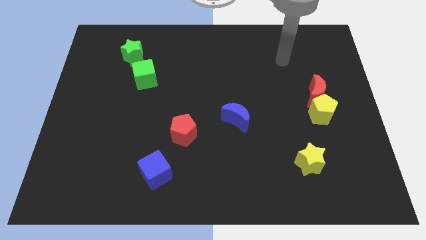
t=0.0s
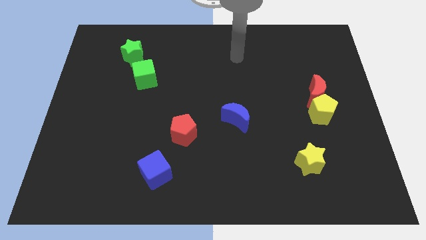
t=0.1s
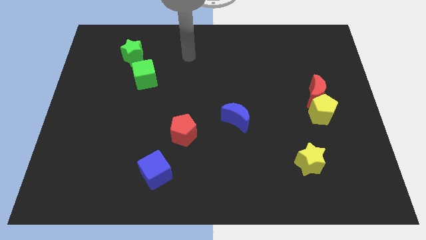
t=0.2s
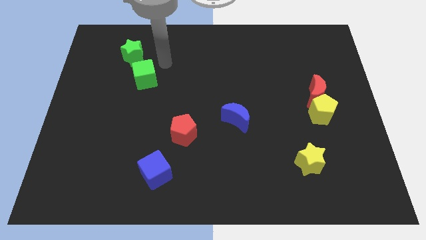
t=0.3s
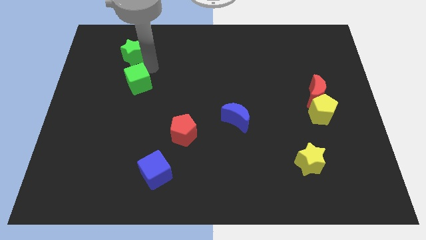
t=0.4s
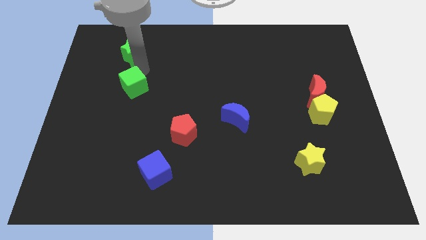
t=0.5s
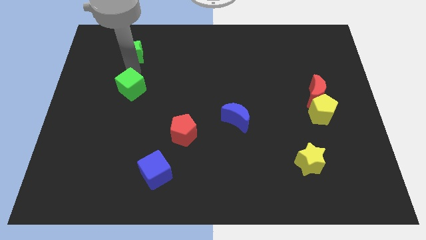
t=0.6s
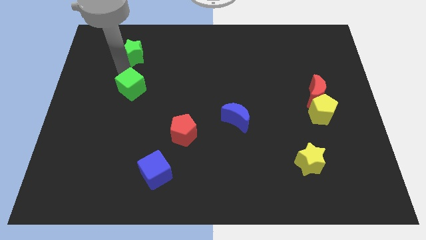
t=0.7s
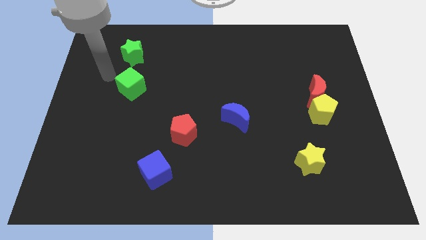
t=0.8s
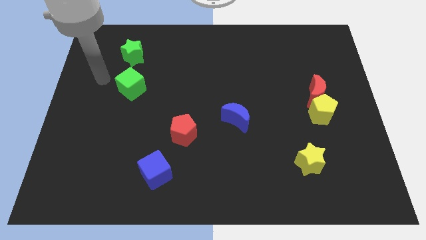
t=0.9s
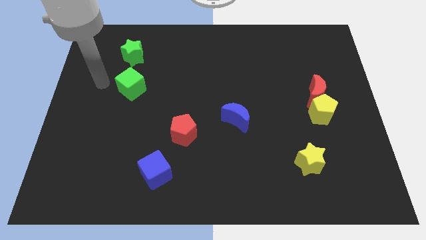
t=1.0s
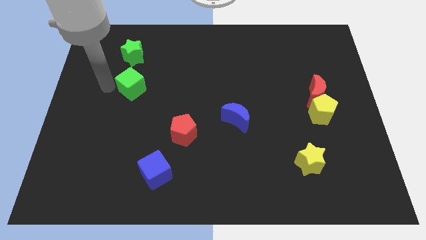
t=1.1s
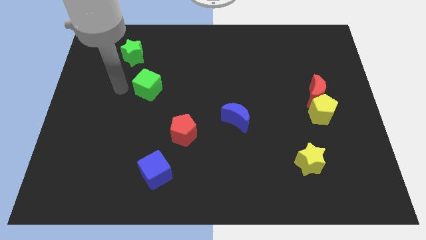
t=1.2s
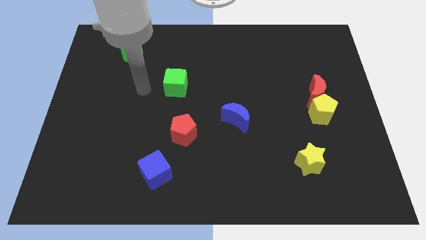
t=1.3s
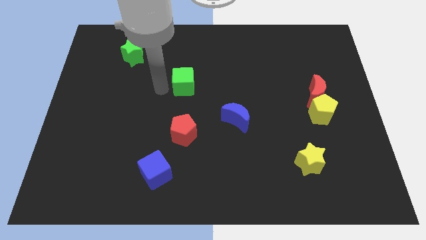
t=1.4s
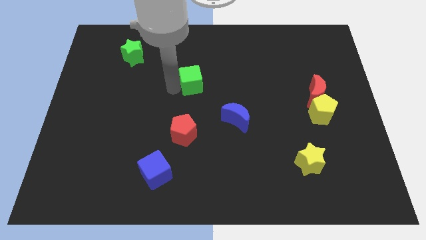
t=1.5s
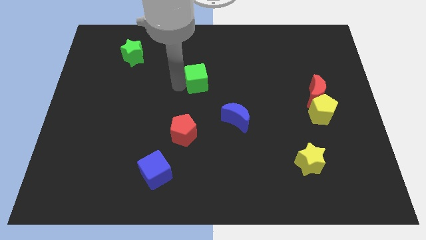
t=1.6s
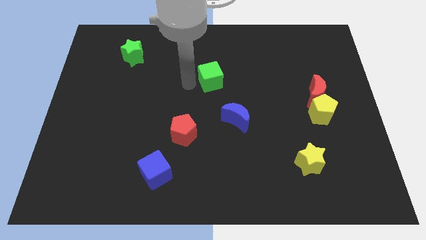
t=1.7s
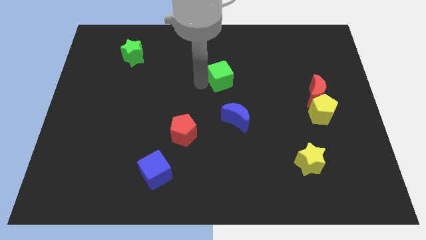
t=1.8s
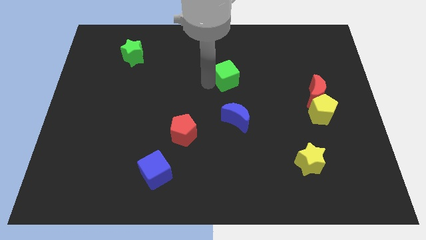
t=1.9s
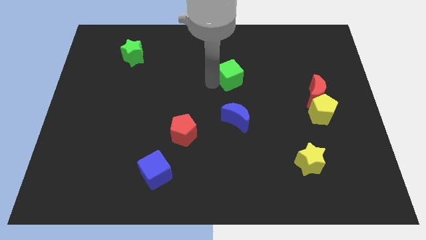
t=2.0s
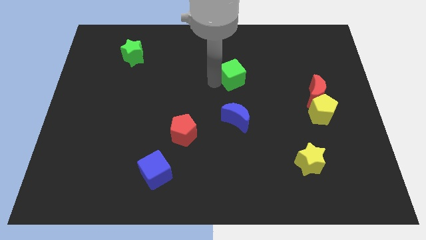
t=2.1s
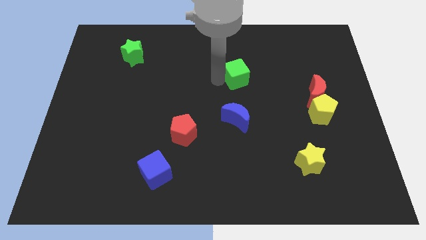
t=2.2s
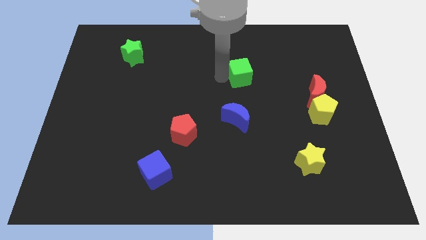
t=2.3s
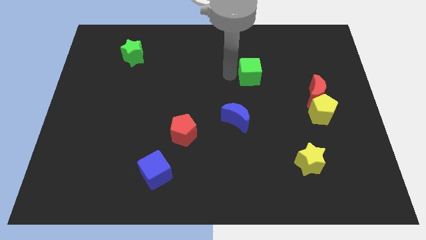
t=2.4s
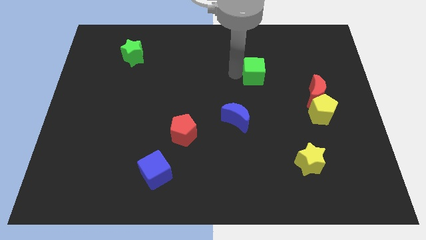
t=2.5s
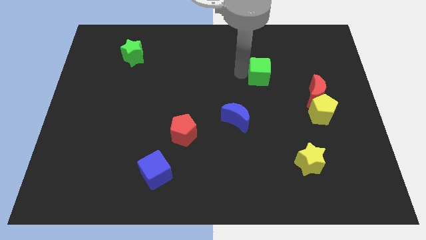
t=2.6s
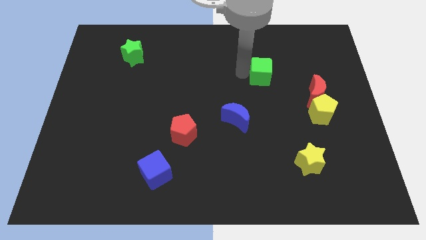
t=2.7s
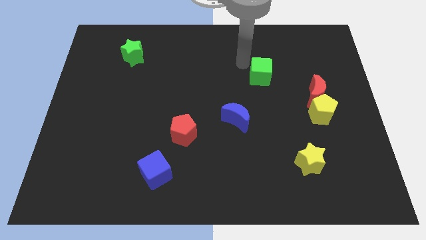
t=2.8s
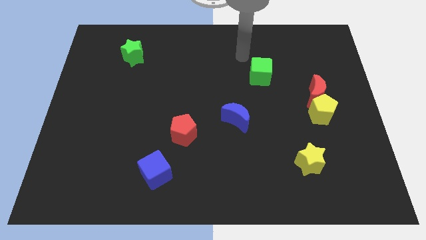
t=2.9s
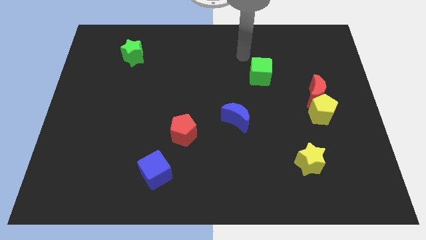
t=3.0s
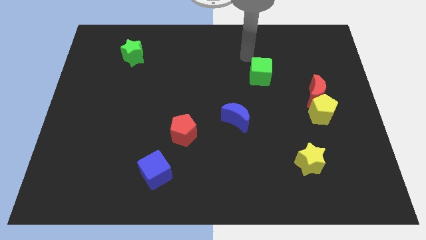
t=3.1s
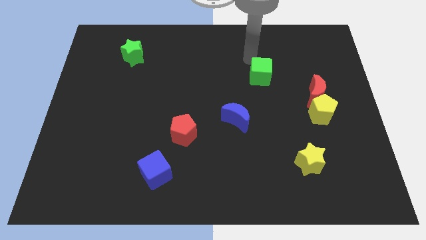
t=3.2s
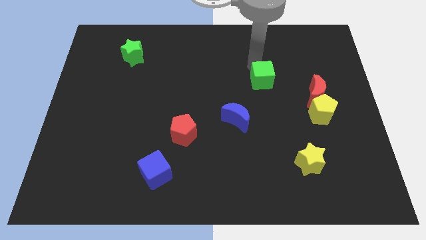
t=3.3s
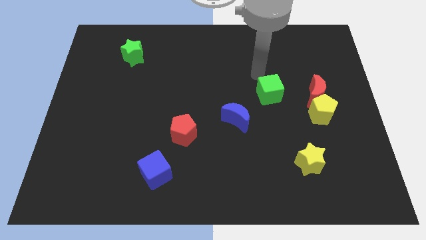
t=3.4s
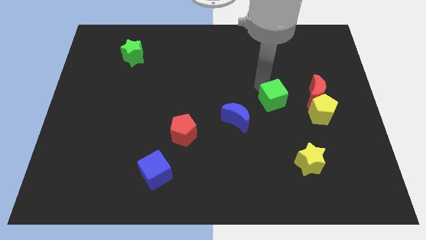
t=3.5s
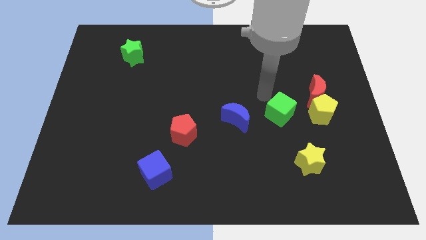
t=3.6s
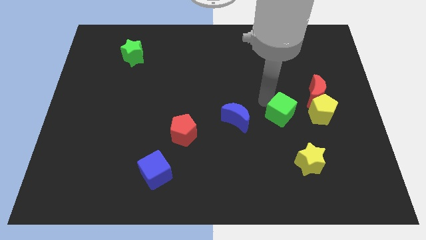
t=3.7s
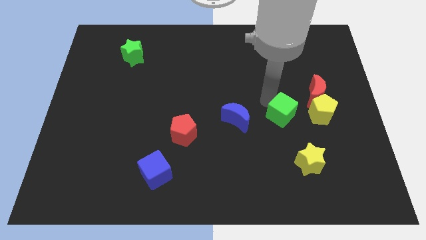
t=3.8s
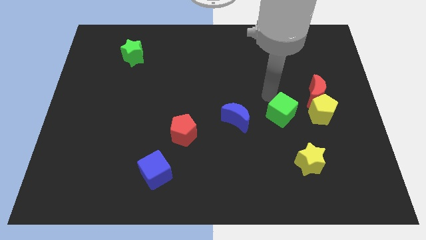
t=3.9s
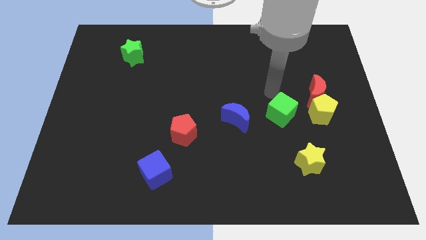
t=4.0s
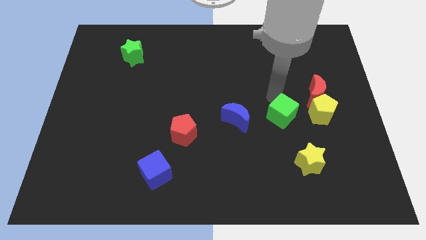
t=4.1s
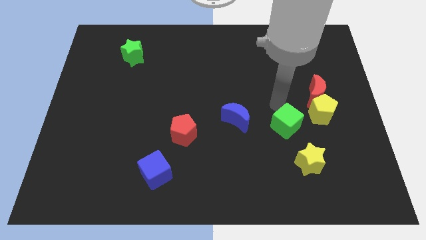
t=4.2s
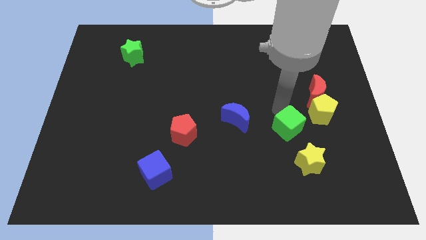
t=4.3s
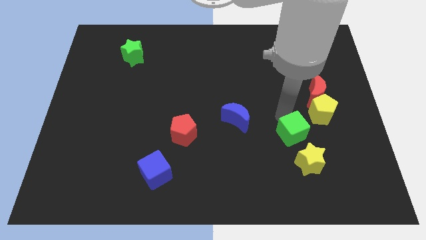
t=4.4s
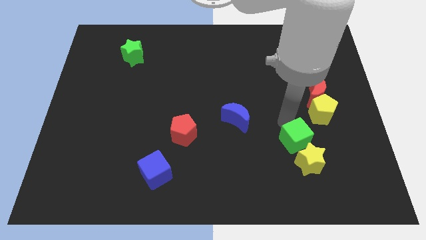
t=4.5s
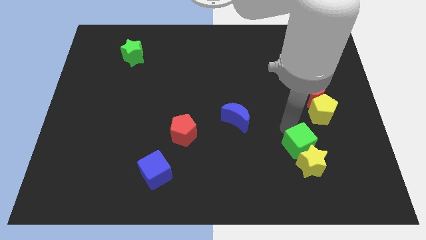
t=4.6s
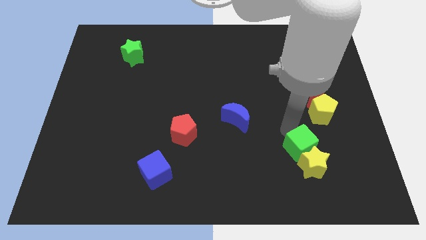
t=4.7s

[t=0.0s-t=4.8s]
put the green cube next to the yellow star

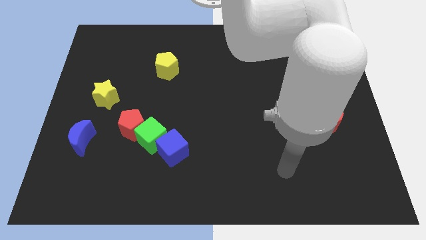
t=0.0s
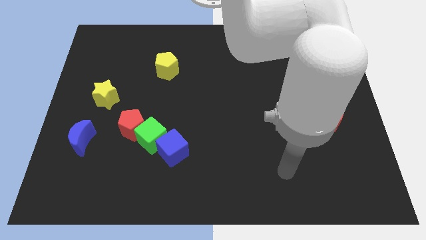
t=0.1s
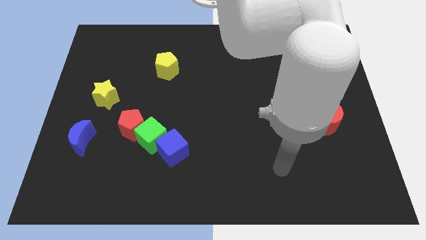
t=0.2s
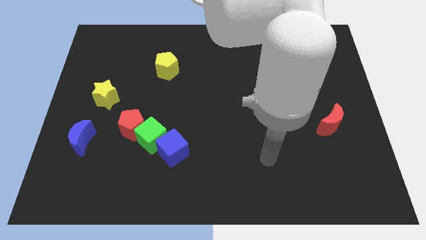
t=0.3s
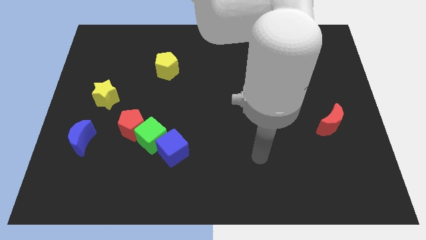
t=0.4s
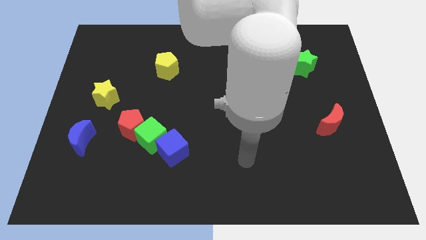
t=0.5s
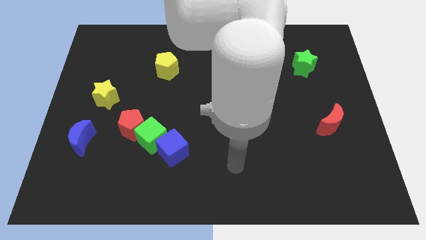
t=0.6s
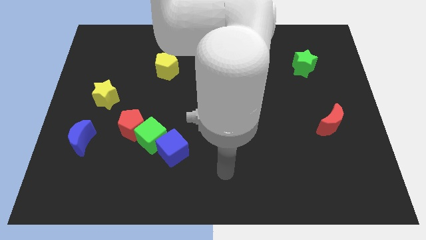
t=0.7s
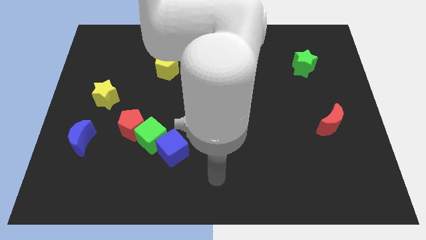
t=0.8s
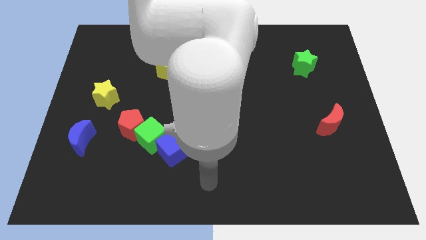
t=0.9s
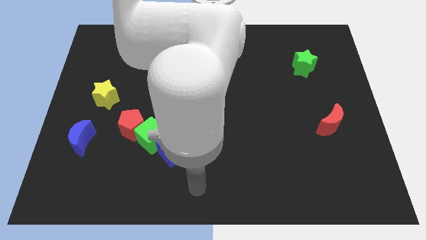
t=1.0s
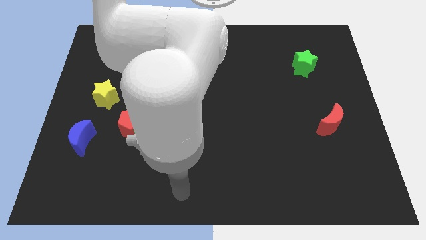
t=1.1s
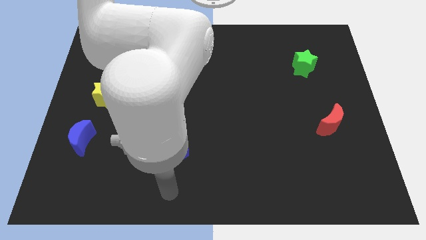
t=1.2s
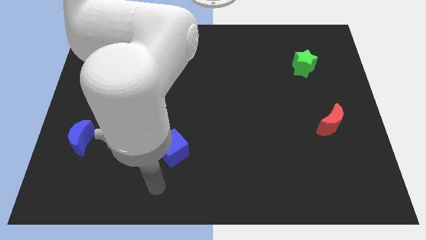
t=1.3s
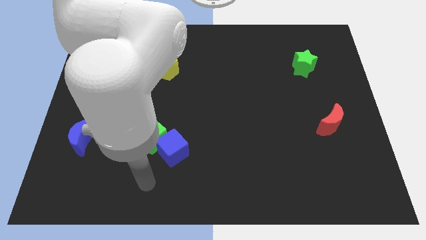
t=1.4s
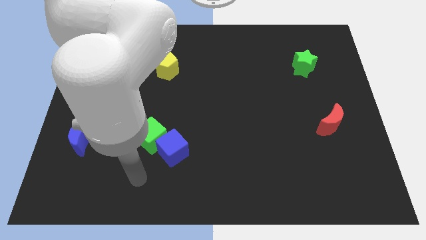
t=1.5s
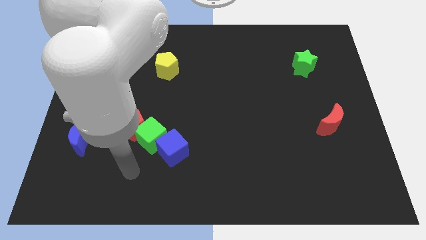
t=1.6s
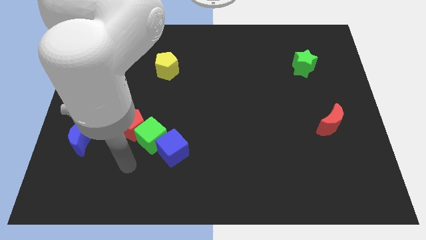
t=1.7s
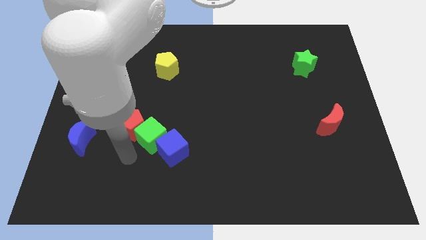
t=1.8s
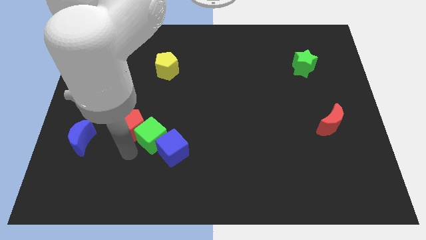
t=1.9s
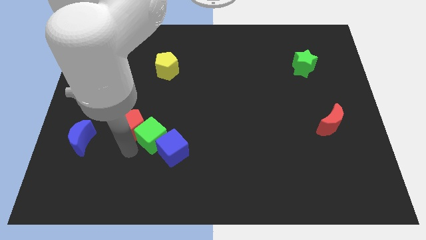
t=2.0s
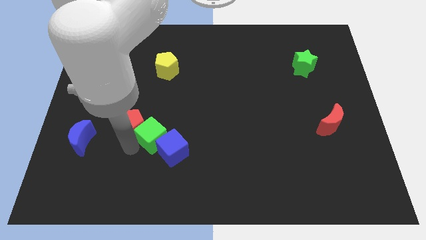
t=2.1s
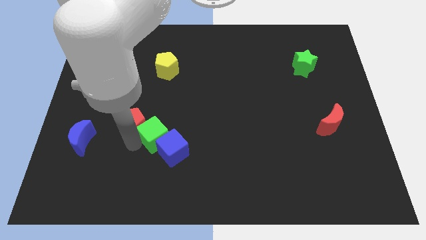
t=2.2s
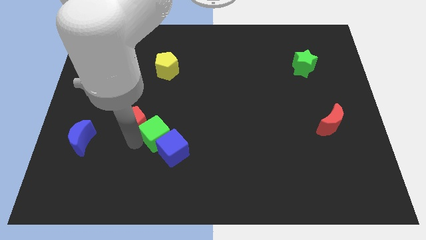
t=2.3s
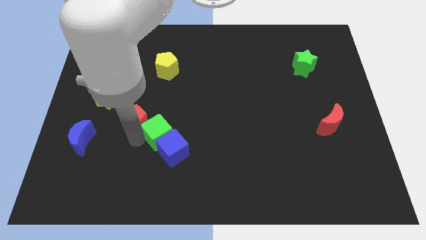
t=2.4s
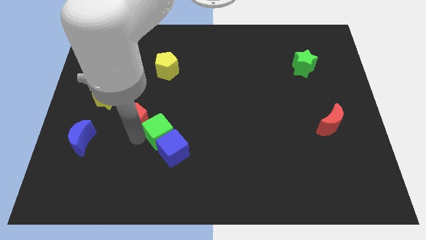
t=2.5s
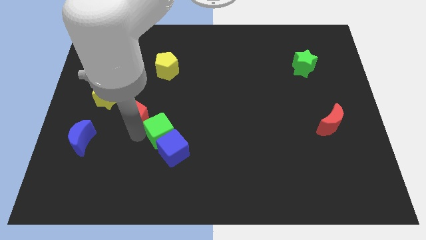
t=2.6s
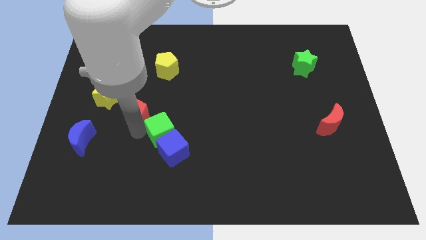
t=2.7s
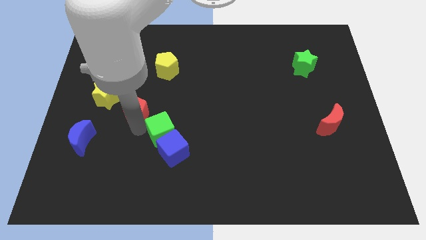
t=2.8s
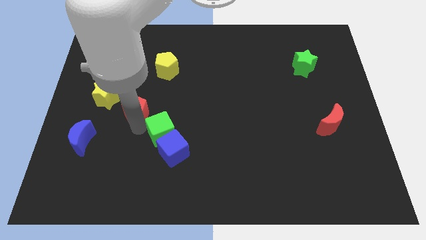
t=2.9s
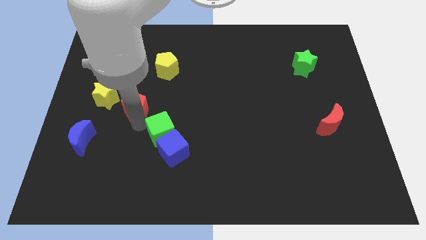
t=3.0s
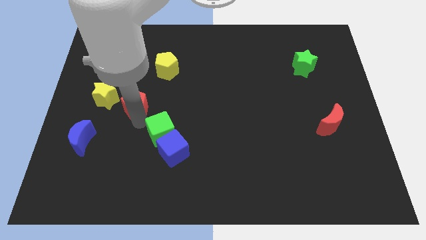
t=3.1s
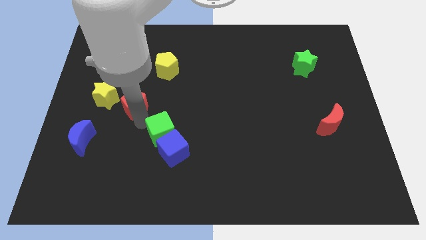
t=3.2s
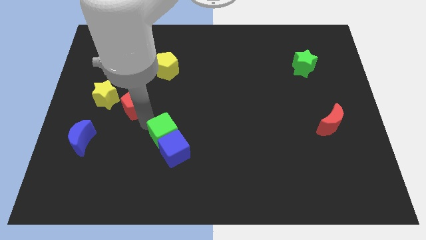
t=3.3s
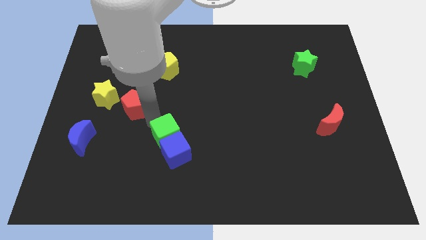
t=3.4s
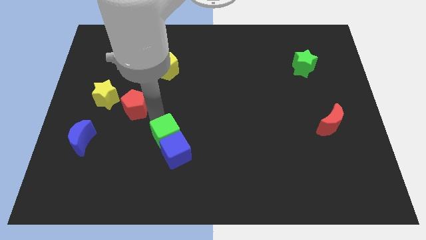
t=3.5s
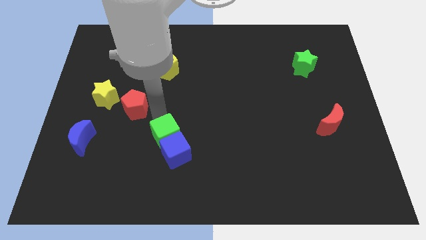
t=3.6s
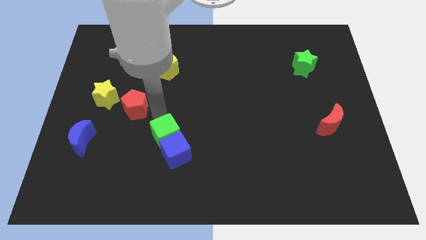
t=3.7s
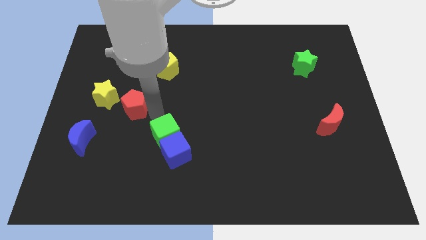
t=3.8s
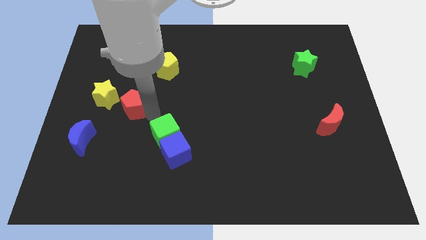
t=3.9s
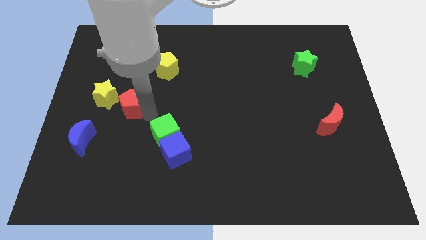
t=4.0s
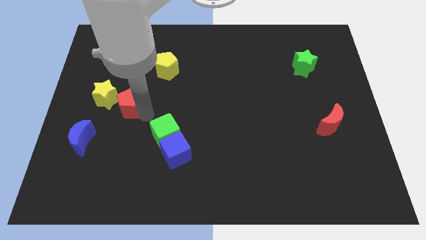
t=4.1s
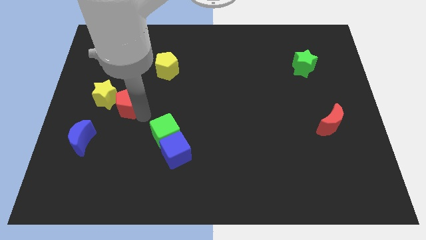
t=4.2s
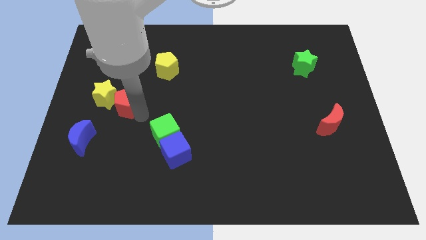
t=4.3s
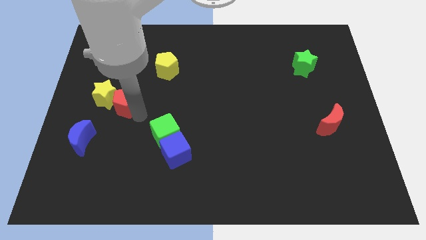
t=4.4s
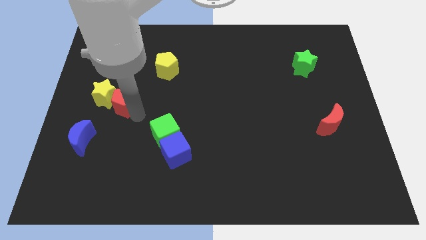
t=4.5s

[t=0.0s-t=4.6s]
slide the red pentagon next to the yellow star
